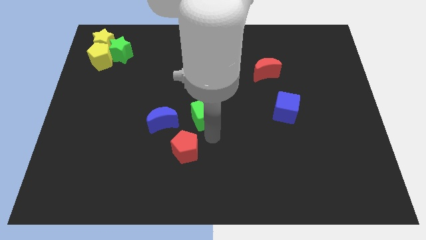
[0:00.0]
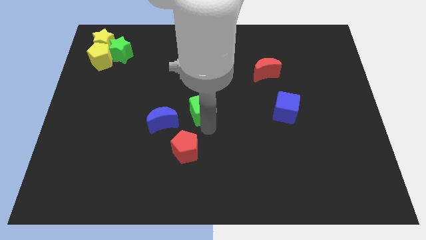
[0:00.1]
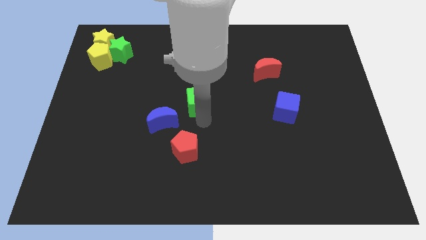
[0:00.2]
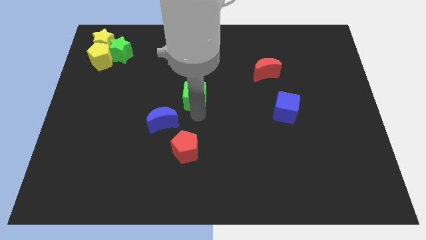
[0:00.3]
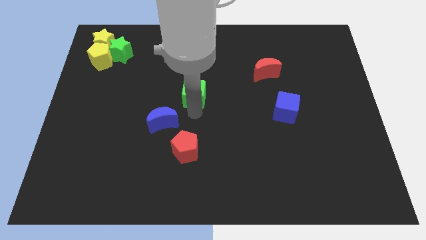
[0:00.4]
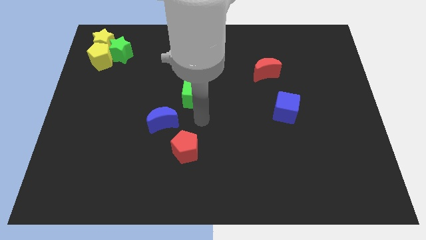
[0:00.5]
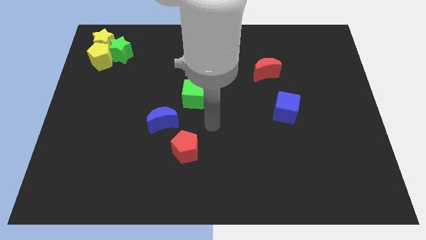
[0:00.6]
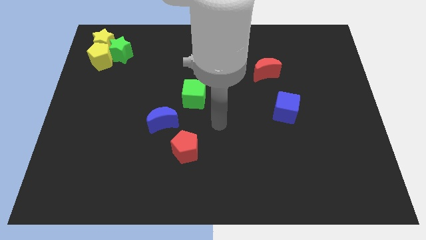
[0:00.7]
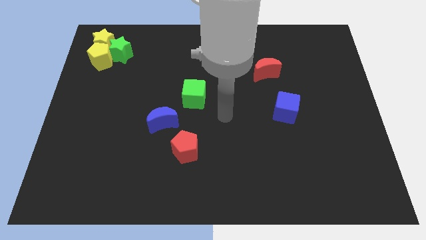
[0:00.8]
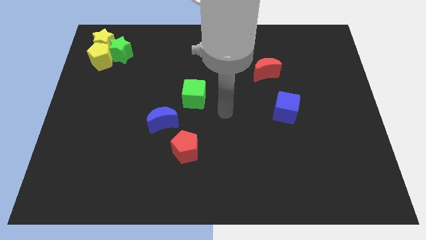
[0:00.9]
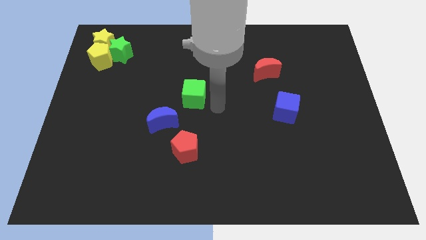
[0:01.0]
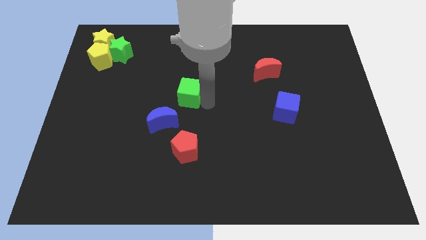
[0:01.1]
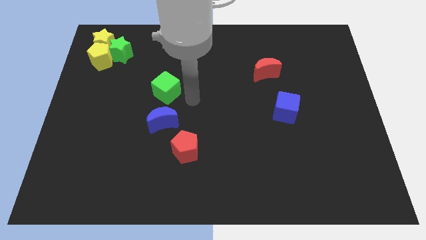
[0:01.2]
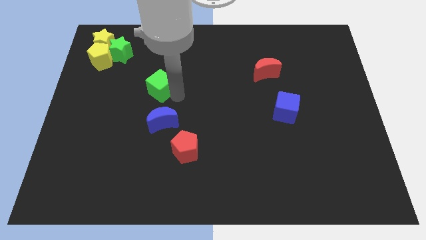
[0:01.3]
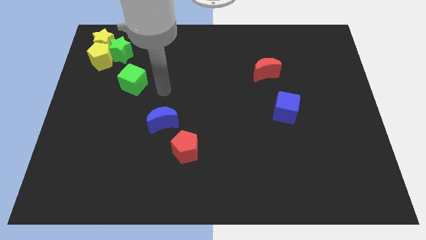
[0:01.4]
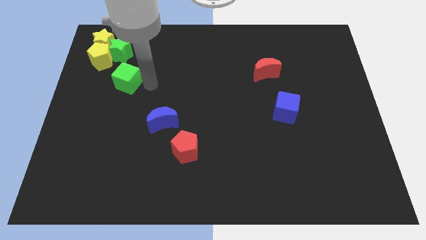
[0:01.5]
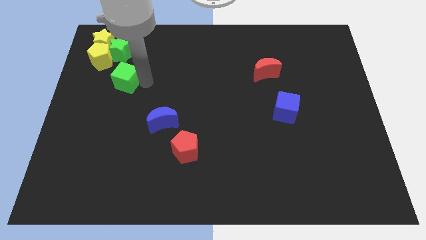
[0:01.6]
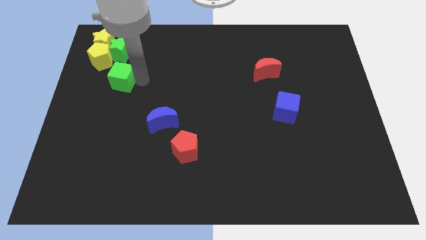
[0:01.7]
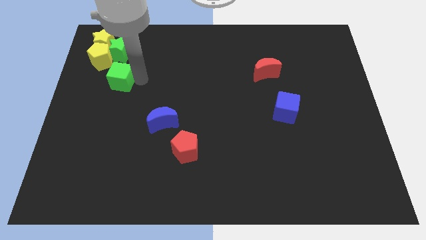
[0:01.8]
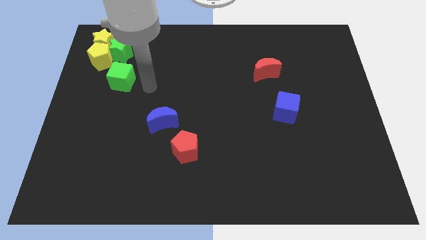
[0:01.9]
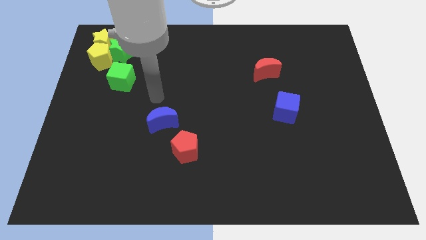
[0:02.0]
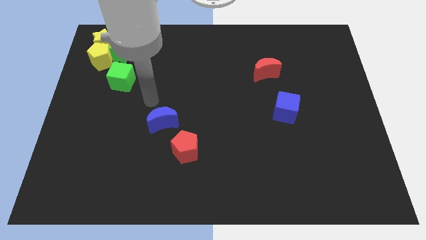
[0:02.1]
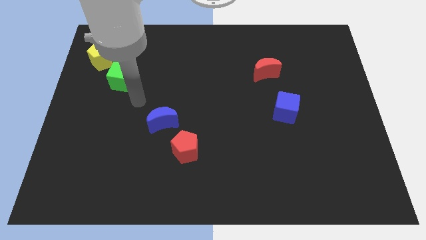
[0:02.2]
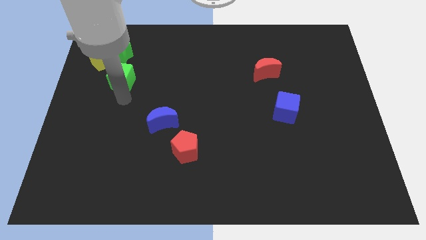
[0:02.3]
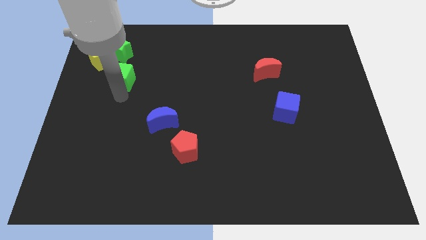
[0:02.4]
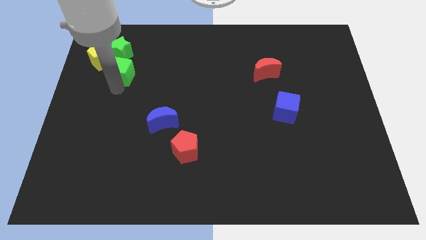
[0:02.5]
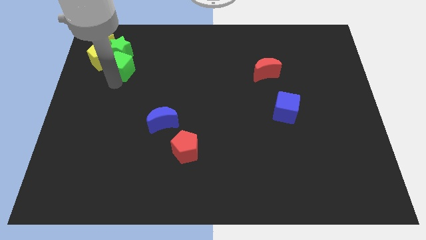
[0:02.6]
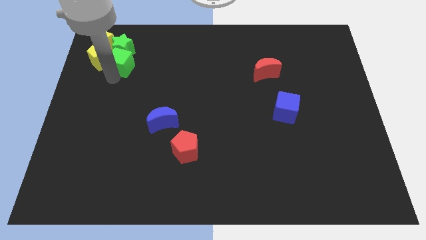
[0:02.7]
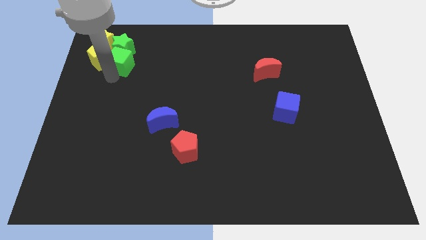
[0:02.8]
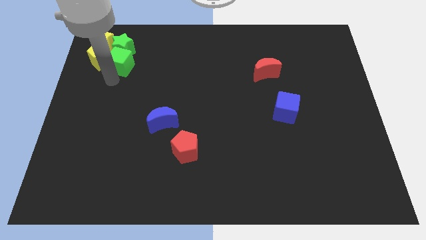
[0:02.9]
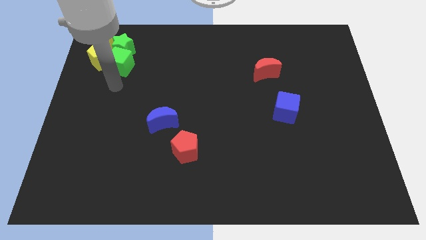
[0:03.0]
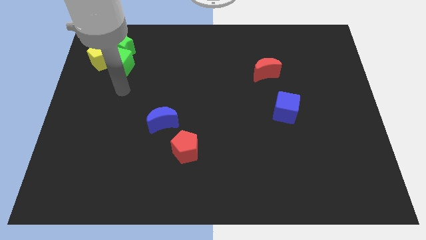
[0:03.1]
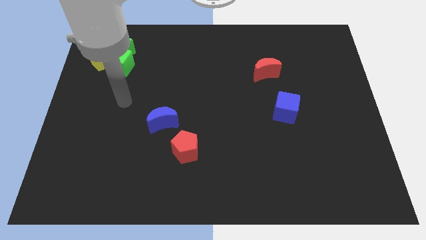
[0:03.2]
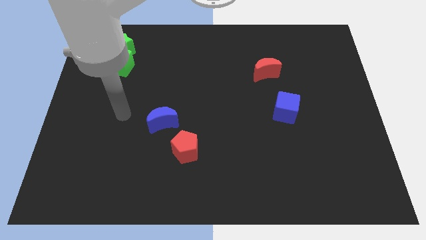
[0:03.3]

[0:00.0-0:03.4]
push the green cube below the green star

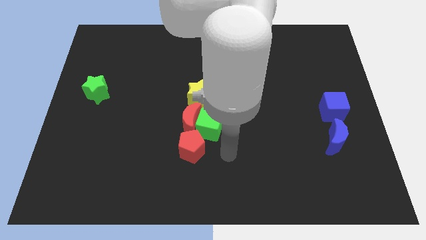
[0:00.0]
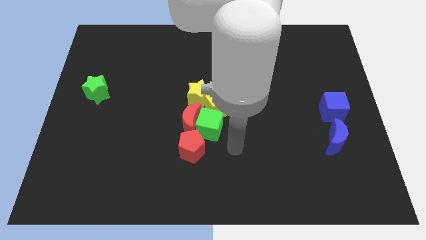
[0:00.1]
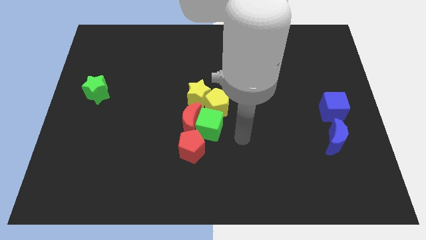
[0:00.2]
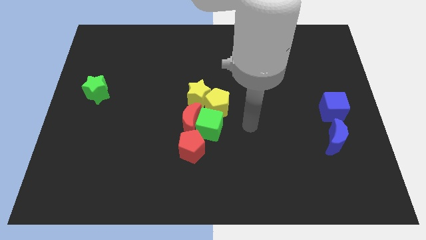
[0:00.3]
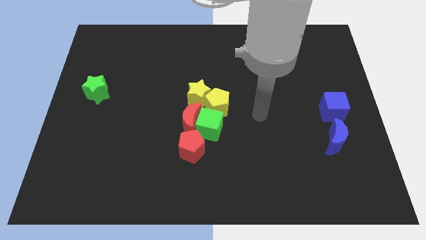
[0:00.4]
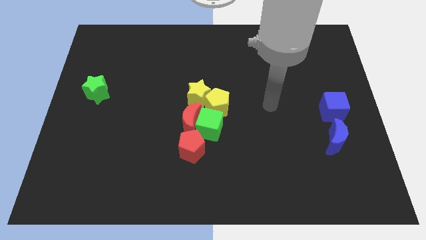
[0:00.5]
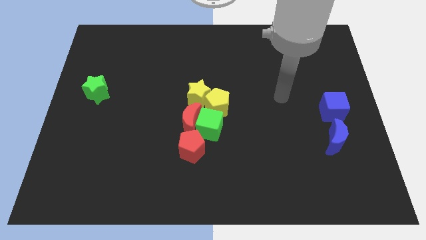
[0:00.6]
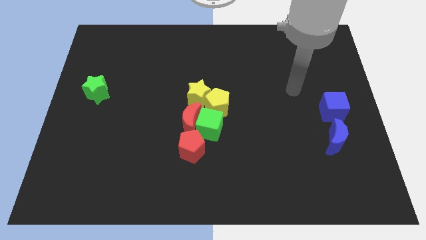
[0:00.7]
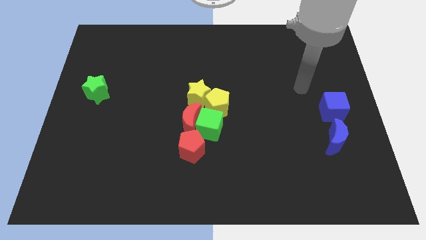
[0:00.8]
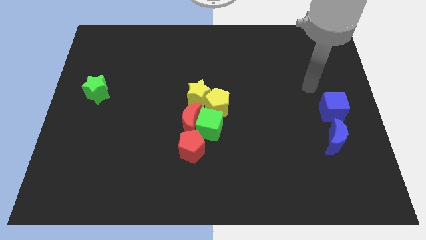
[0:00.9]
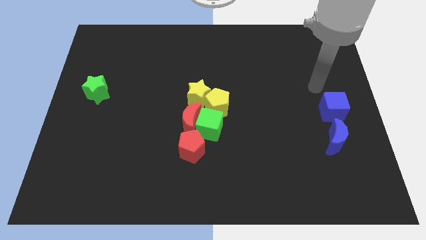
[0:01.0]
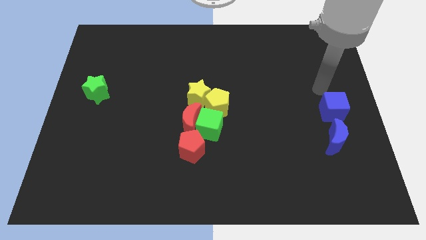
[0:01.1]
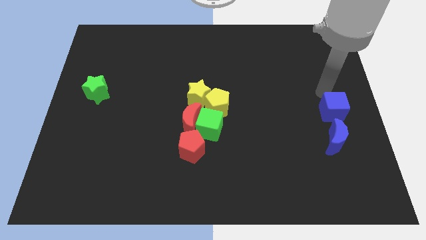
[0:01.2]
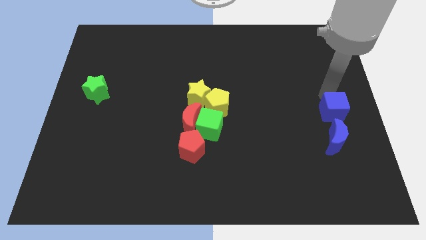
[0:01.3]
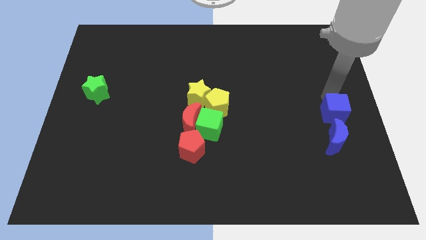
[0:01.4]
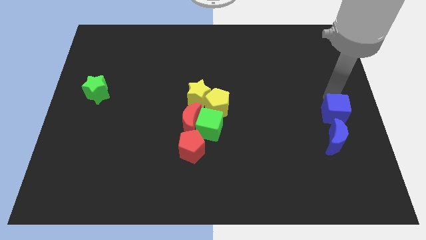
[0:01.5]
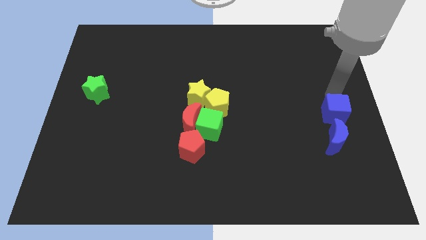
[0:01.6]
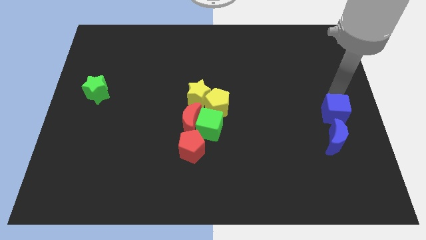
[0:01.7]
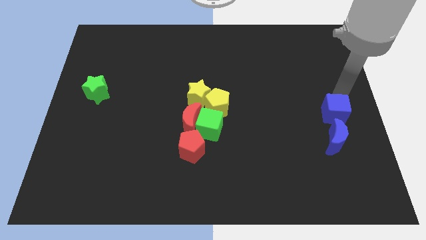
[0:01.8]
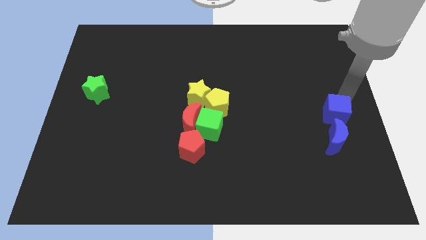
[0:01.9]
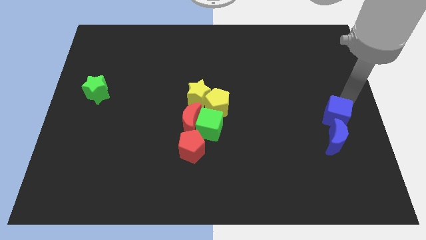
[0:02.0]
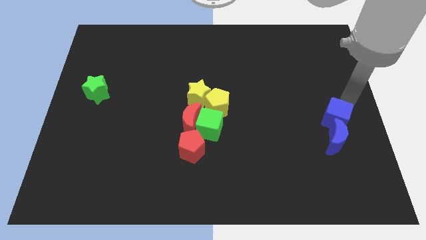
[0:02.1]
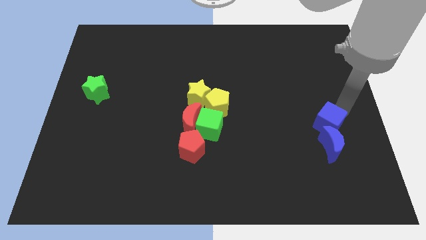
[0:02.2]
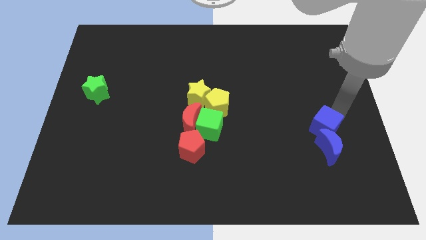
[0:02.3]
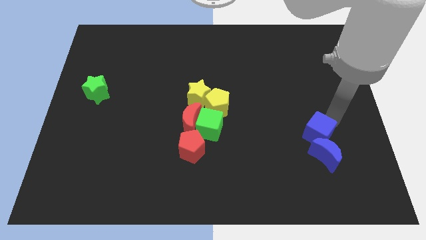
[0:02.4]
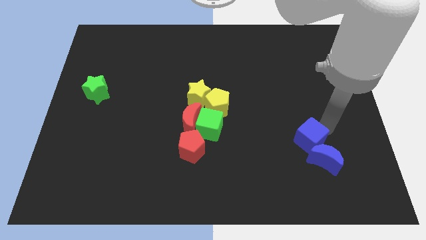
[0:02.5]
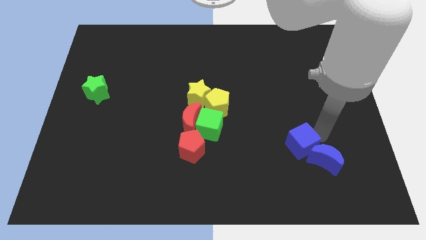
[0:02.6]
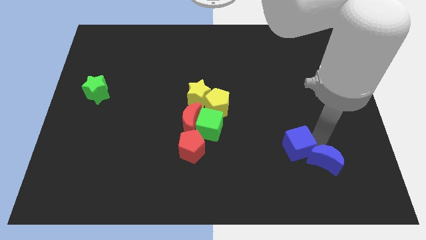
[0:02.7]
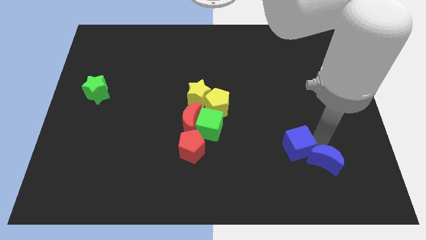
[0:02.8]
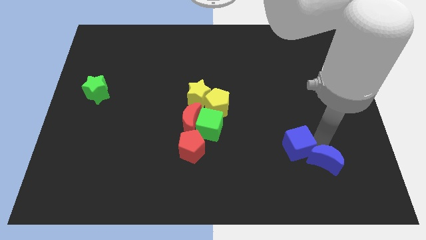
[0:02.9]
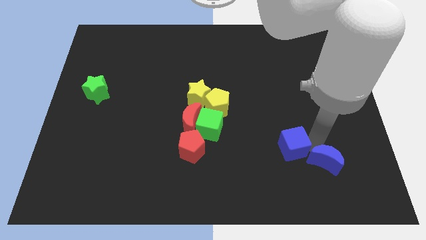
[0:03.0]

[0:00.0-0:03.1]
move blue cube towards bottom center

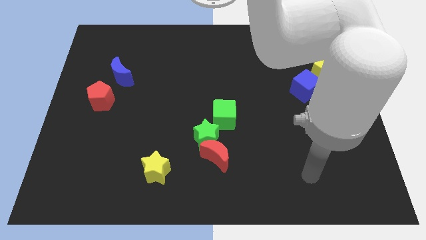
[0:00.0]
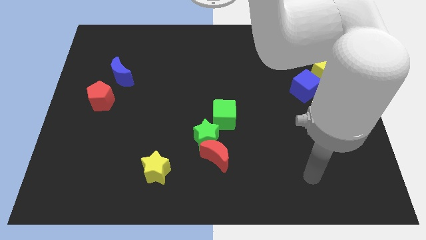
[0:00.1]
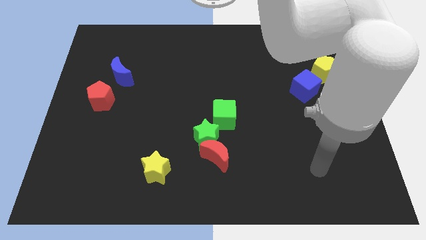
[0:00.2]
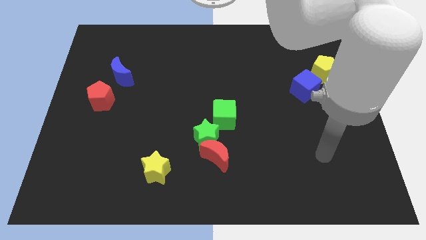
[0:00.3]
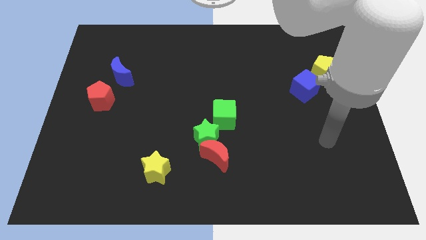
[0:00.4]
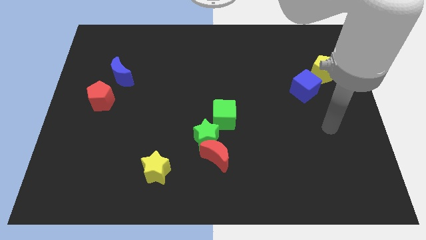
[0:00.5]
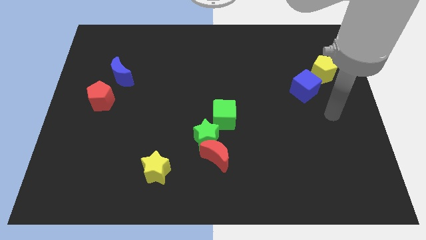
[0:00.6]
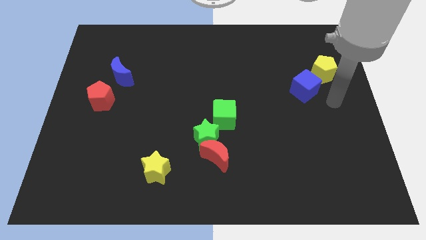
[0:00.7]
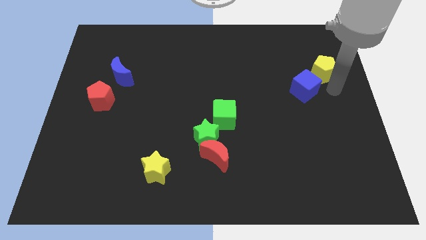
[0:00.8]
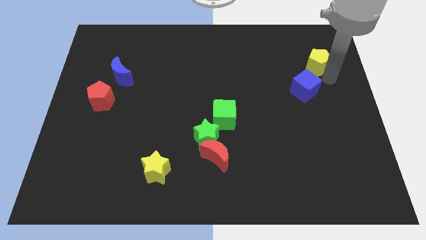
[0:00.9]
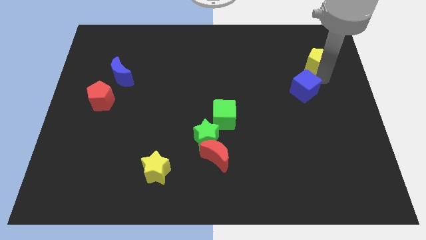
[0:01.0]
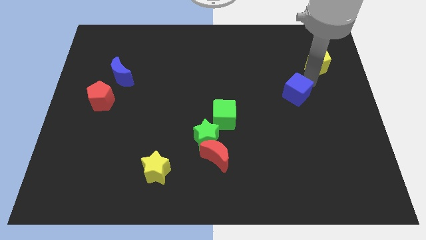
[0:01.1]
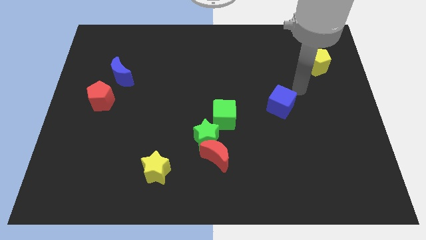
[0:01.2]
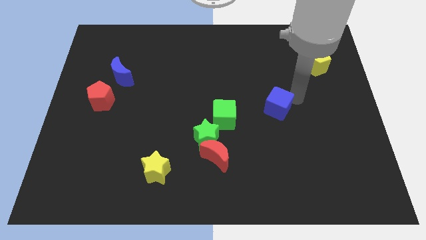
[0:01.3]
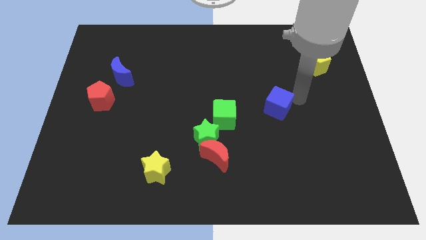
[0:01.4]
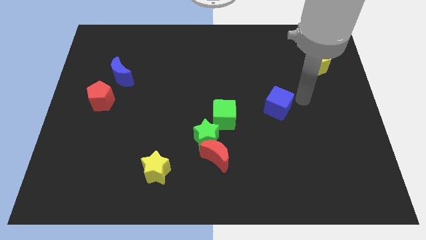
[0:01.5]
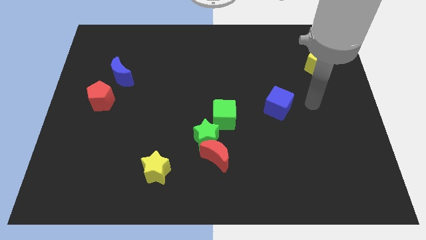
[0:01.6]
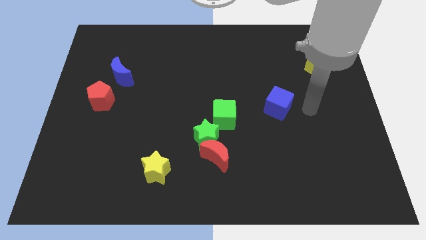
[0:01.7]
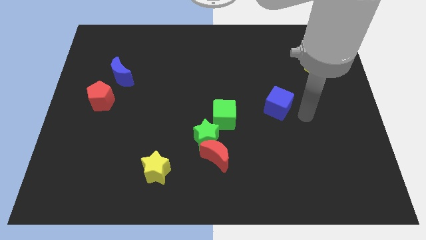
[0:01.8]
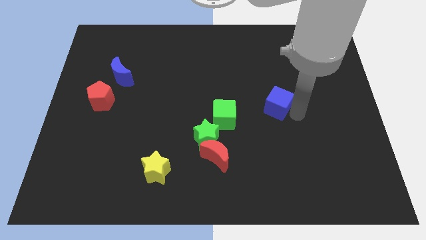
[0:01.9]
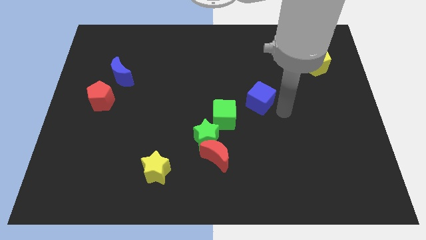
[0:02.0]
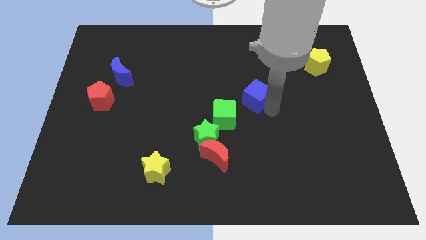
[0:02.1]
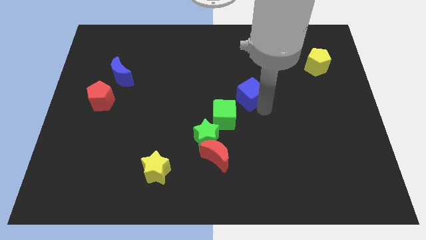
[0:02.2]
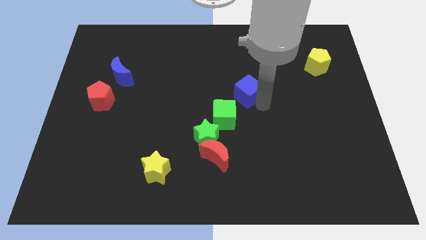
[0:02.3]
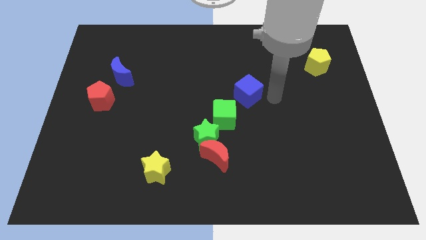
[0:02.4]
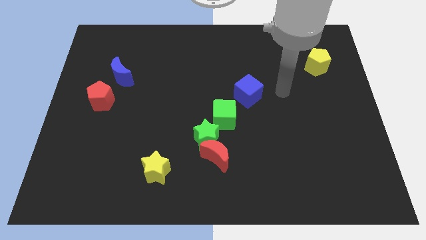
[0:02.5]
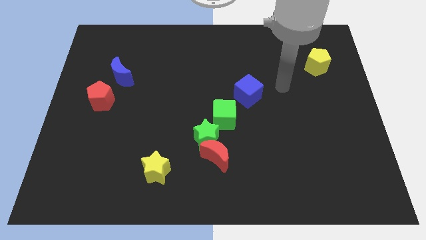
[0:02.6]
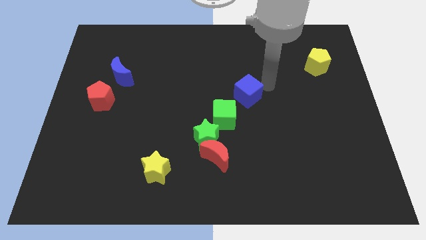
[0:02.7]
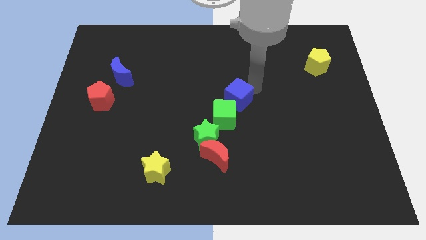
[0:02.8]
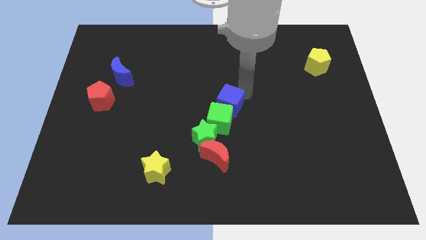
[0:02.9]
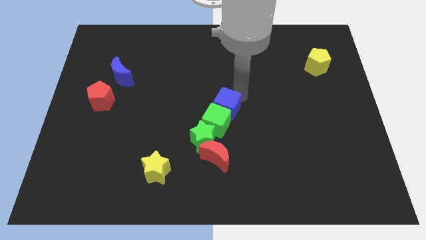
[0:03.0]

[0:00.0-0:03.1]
drag the blue cube into the green cube
